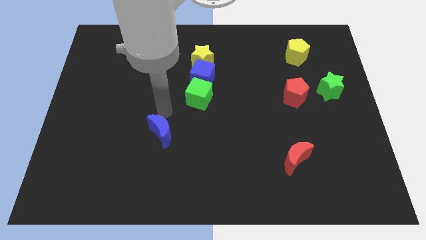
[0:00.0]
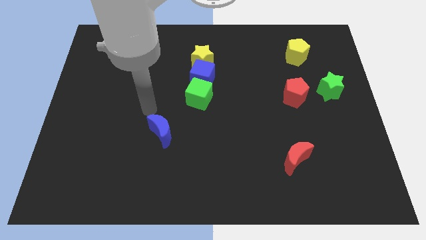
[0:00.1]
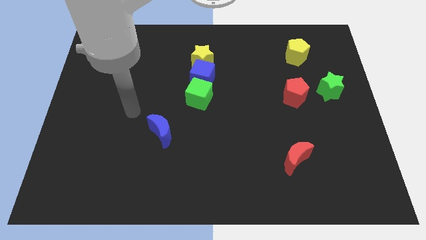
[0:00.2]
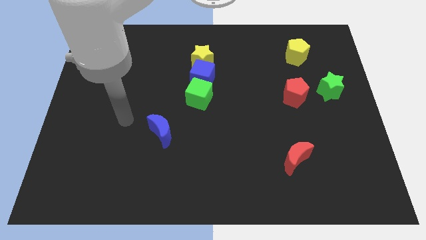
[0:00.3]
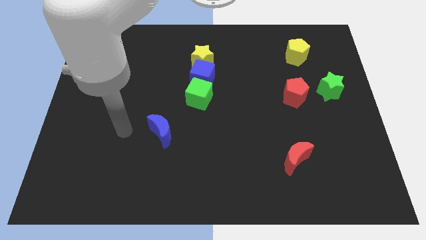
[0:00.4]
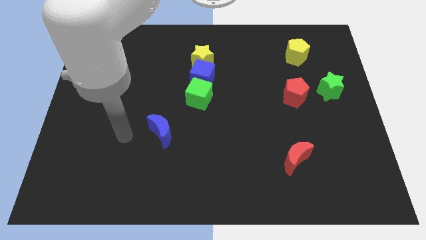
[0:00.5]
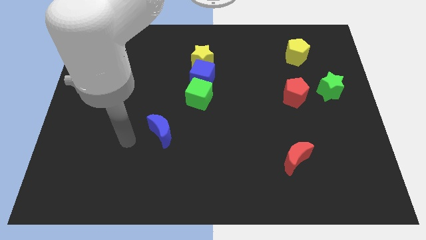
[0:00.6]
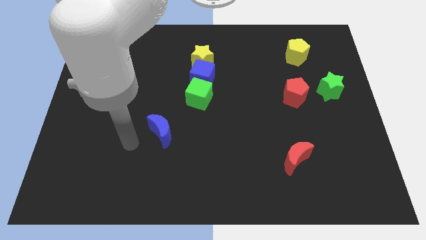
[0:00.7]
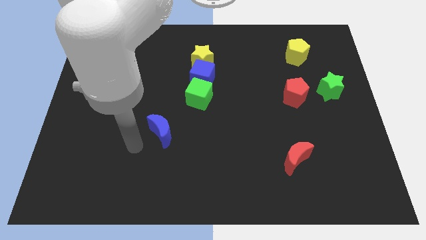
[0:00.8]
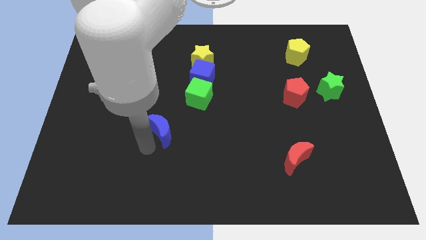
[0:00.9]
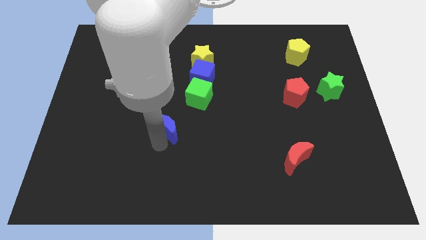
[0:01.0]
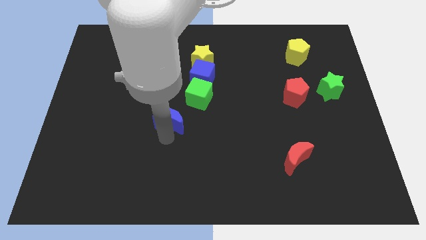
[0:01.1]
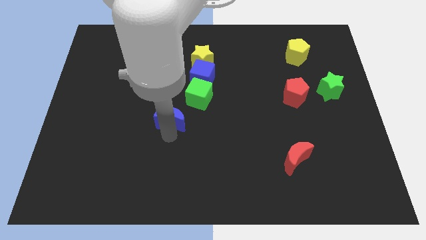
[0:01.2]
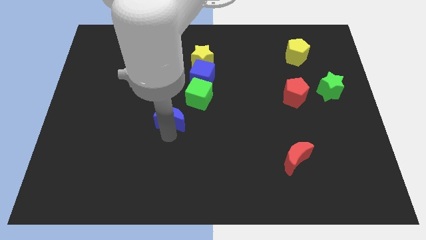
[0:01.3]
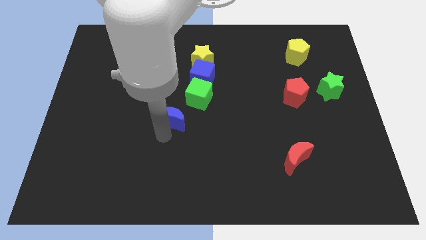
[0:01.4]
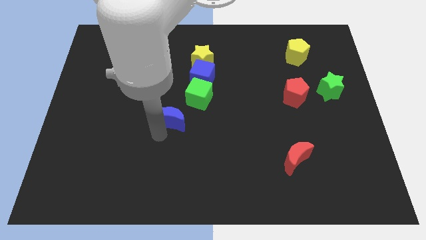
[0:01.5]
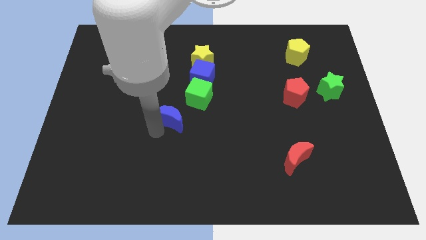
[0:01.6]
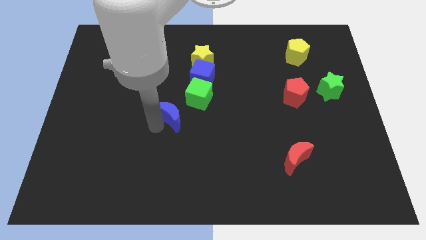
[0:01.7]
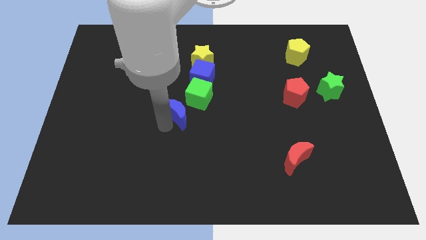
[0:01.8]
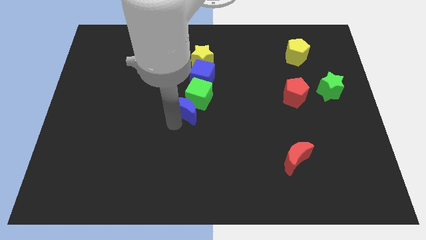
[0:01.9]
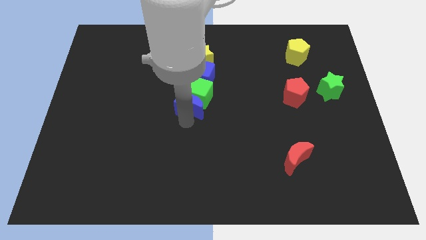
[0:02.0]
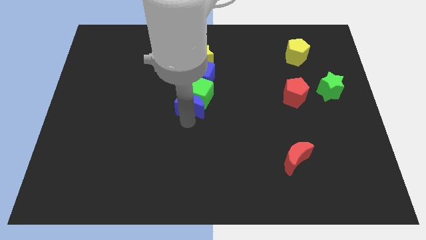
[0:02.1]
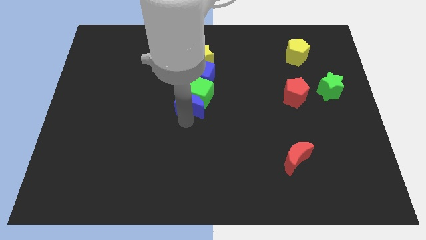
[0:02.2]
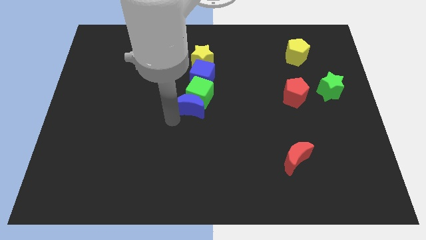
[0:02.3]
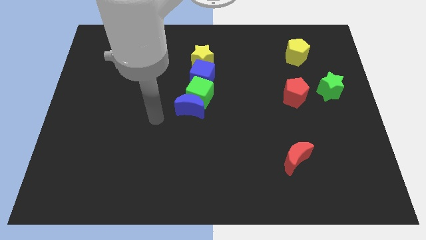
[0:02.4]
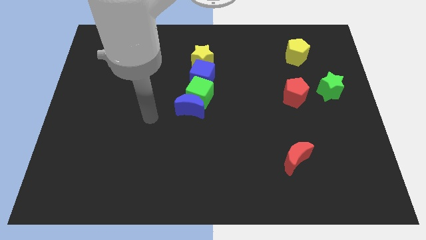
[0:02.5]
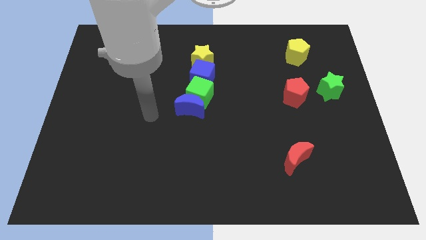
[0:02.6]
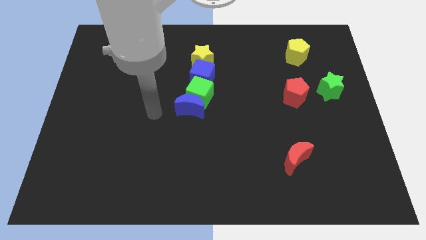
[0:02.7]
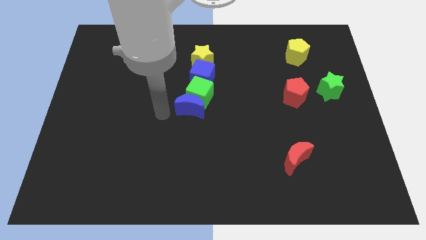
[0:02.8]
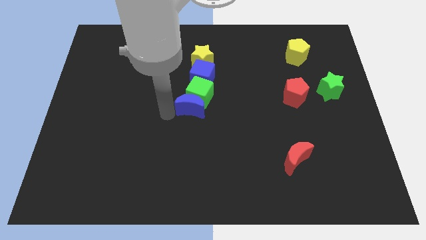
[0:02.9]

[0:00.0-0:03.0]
push the blue moon closer to the green cube

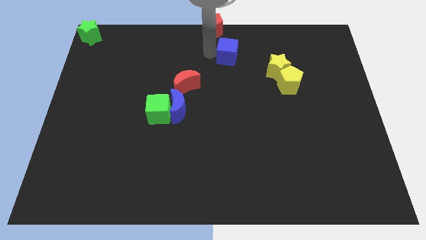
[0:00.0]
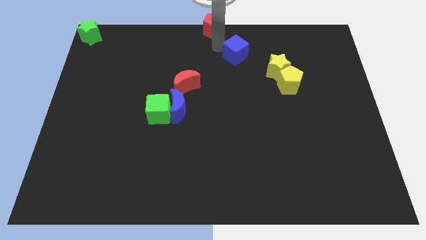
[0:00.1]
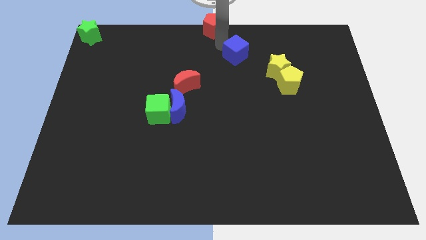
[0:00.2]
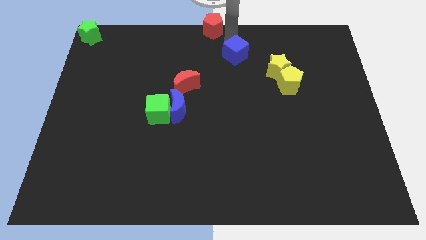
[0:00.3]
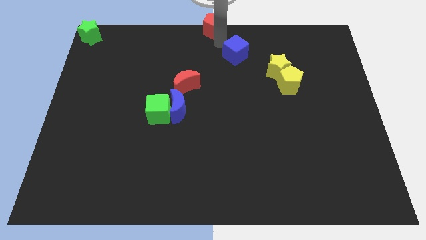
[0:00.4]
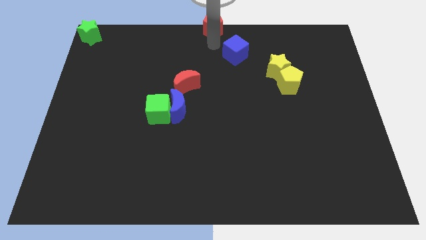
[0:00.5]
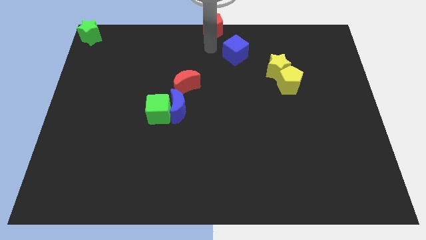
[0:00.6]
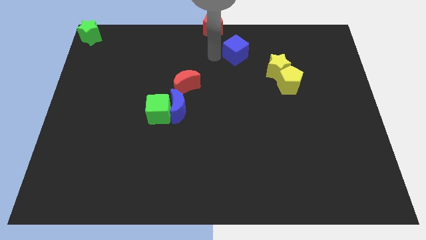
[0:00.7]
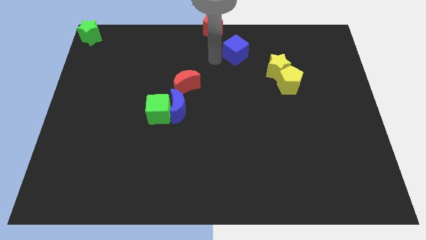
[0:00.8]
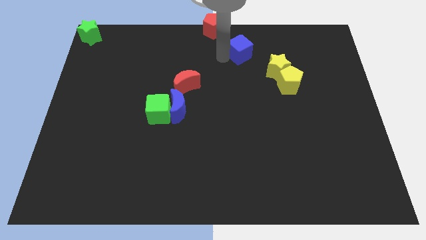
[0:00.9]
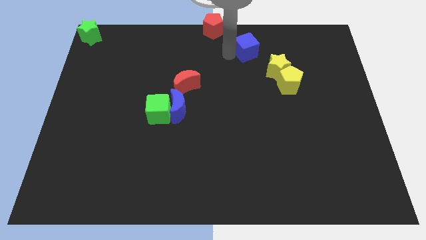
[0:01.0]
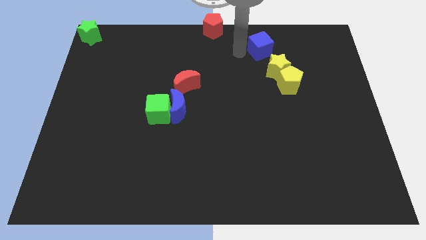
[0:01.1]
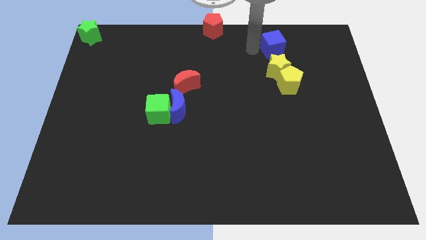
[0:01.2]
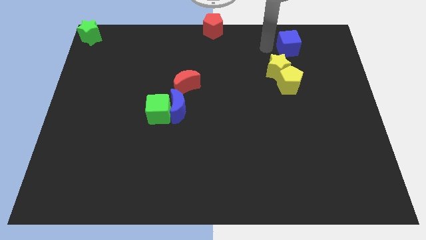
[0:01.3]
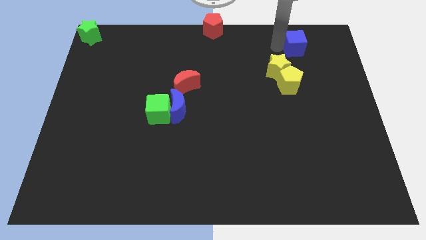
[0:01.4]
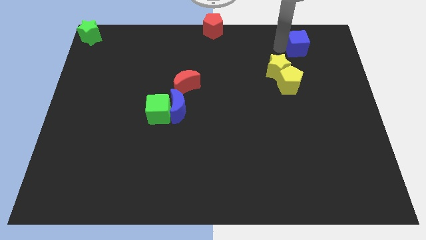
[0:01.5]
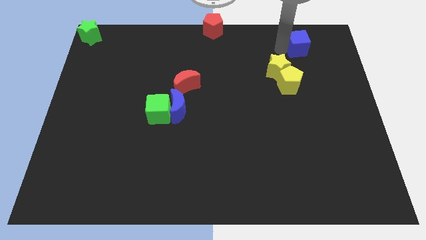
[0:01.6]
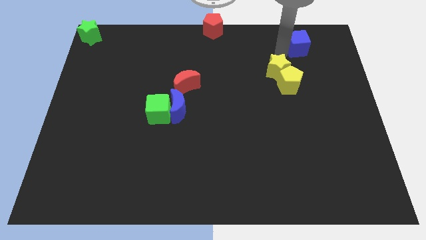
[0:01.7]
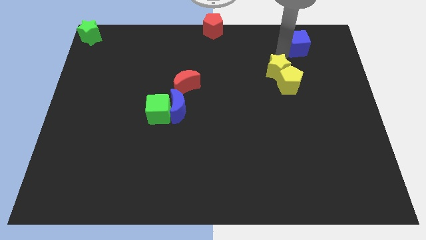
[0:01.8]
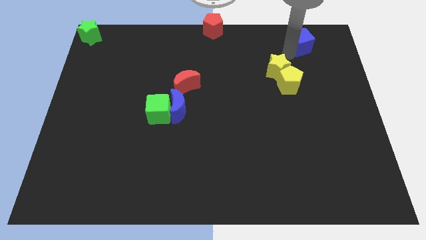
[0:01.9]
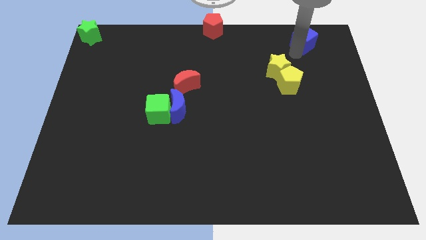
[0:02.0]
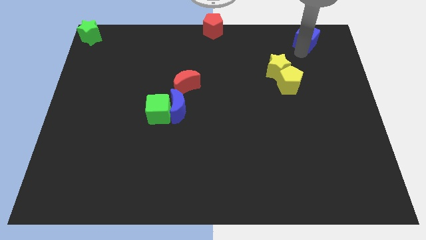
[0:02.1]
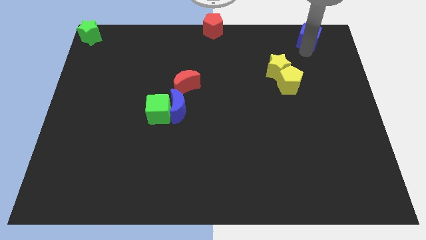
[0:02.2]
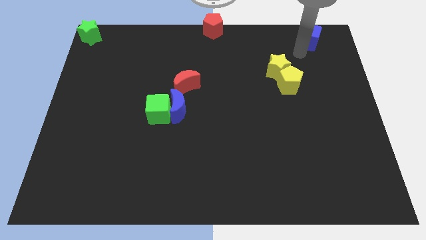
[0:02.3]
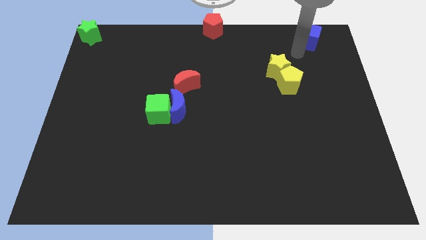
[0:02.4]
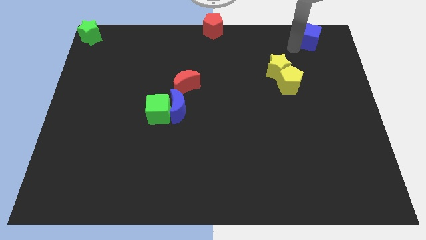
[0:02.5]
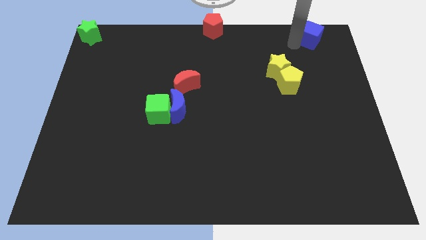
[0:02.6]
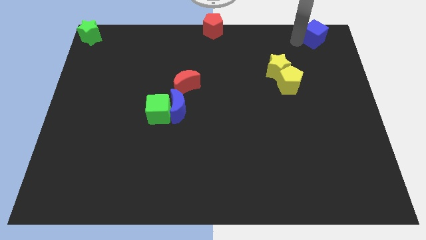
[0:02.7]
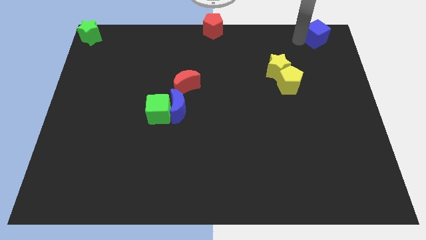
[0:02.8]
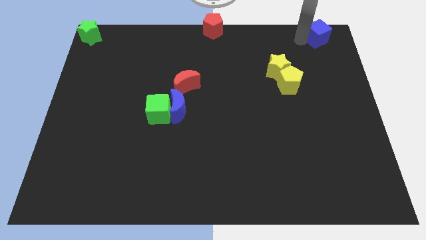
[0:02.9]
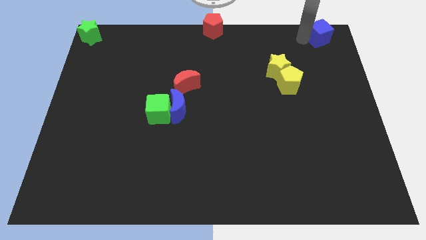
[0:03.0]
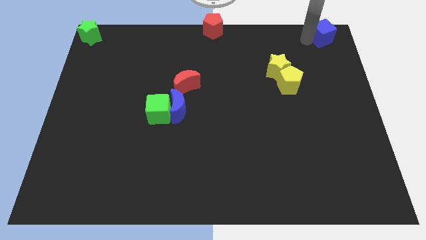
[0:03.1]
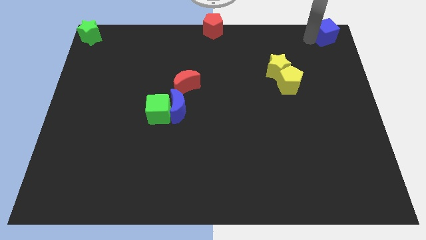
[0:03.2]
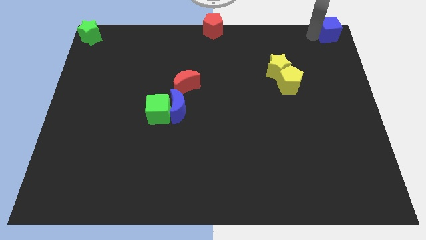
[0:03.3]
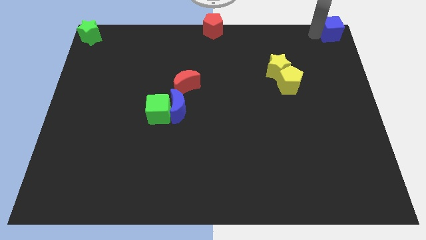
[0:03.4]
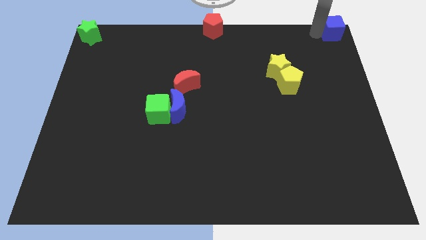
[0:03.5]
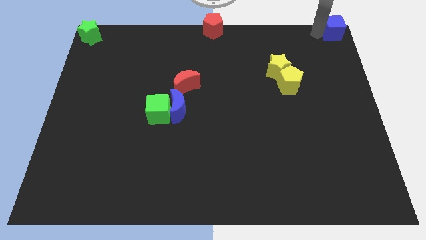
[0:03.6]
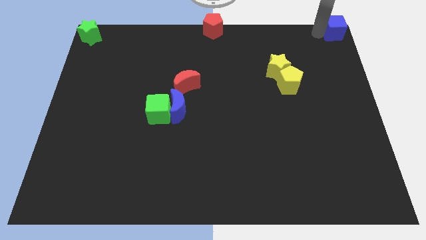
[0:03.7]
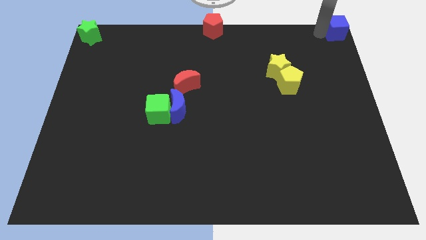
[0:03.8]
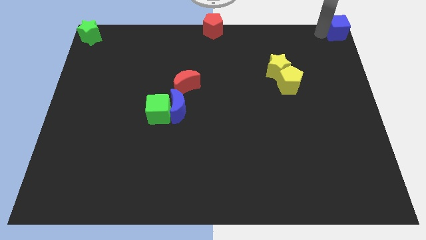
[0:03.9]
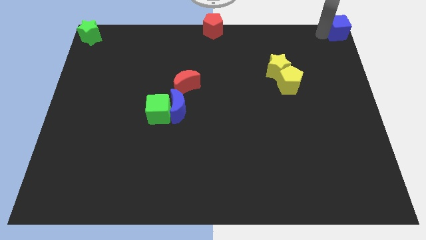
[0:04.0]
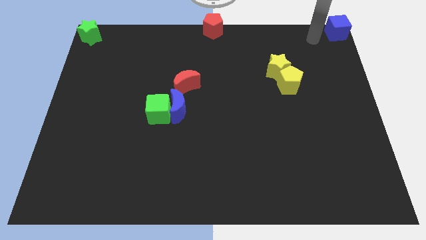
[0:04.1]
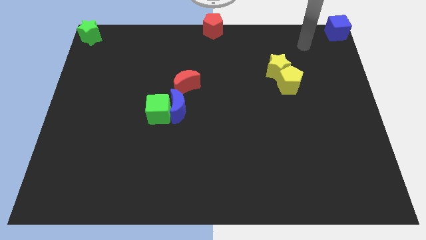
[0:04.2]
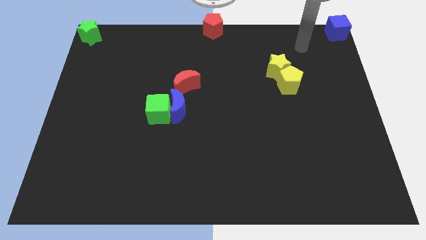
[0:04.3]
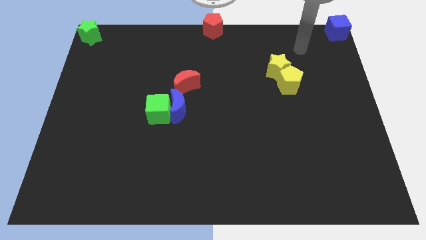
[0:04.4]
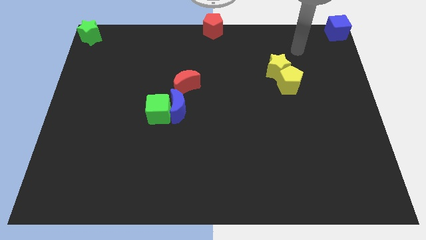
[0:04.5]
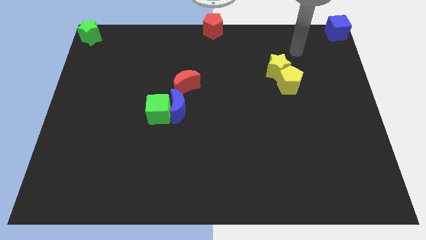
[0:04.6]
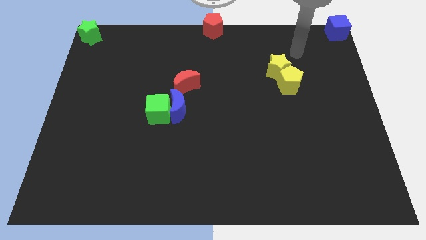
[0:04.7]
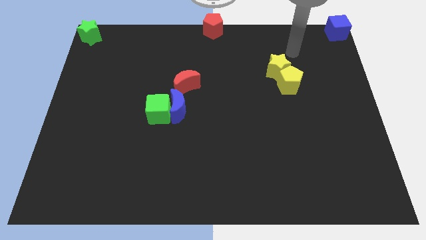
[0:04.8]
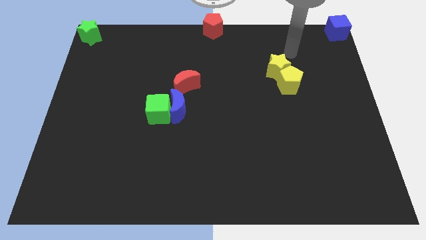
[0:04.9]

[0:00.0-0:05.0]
push the blue cube to the top right

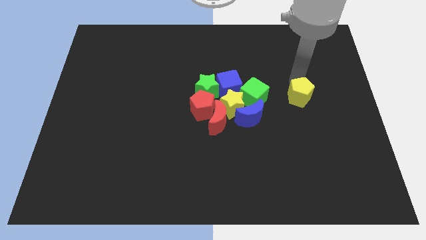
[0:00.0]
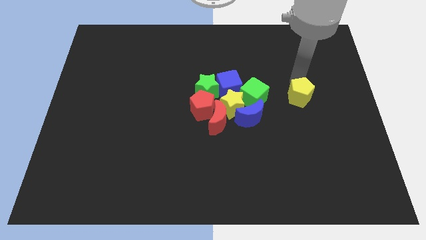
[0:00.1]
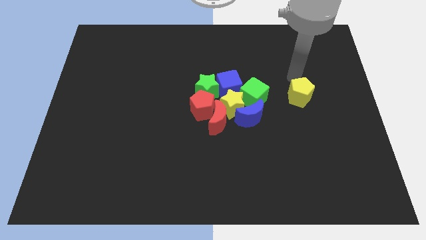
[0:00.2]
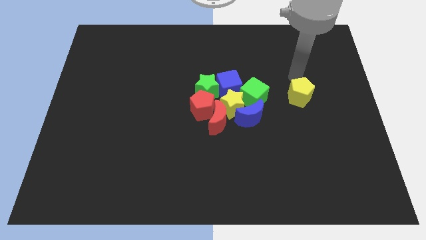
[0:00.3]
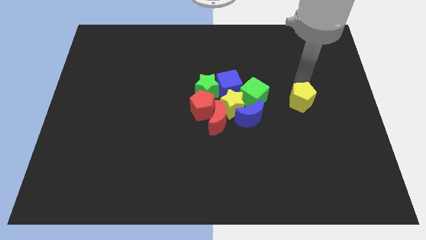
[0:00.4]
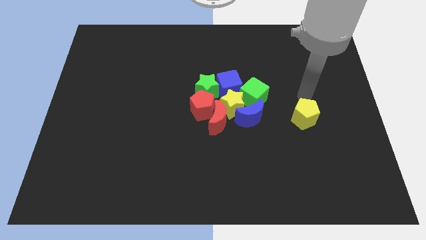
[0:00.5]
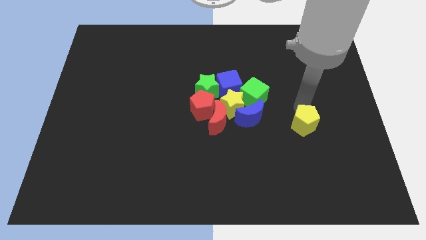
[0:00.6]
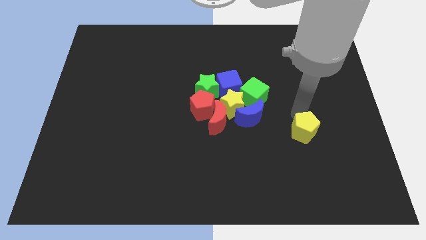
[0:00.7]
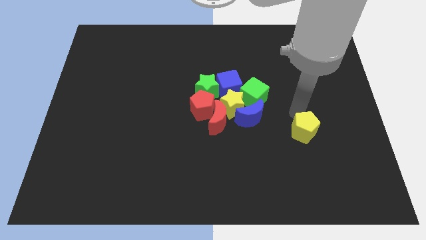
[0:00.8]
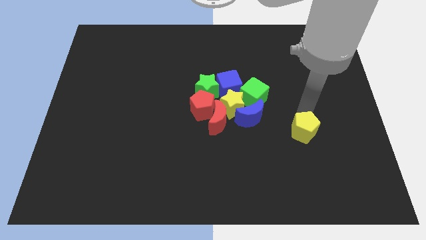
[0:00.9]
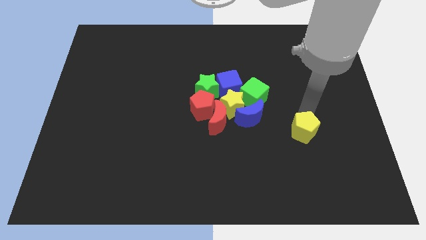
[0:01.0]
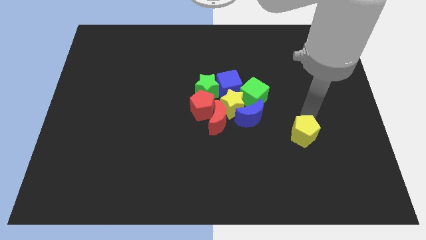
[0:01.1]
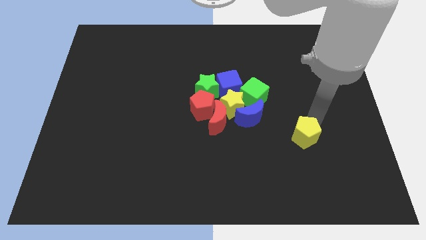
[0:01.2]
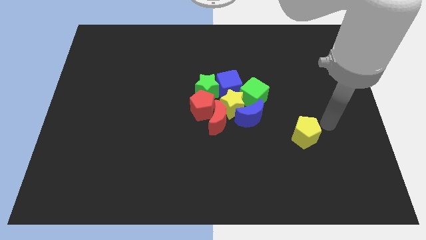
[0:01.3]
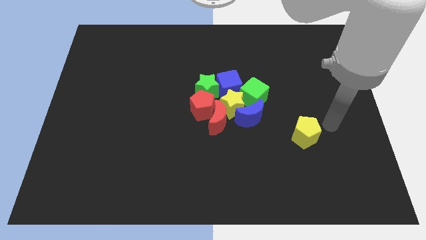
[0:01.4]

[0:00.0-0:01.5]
move yellow pentagon towards bottom
